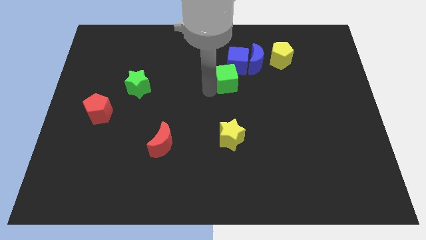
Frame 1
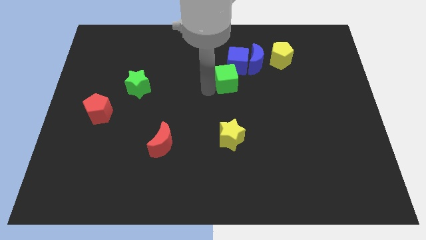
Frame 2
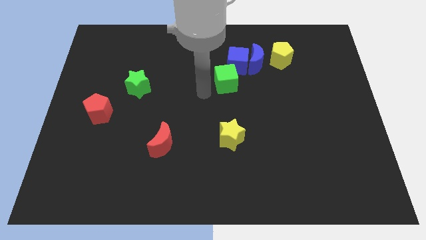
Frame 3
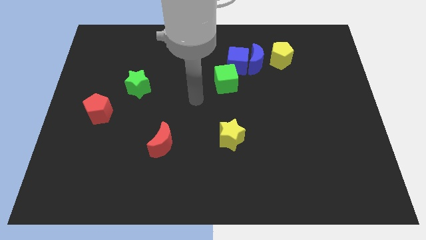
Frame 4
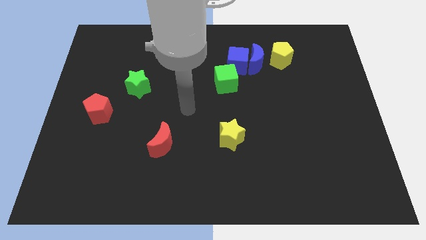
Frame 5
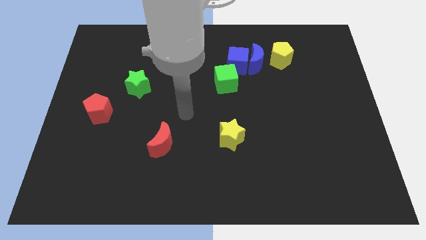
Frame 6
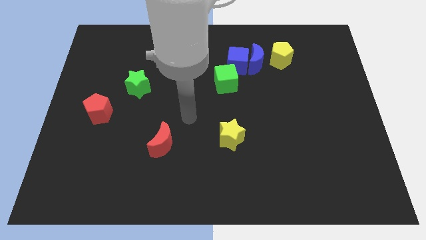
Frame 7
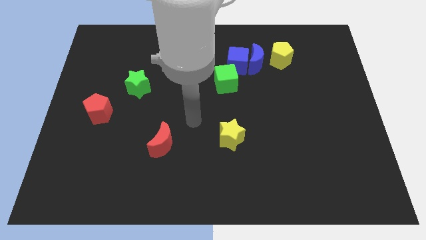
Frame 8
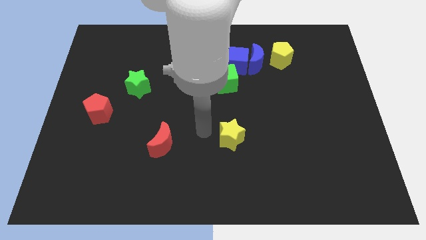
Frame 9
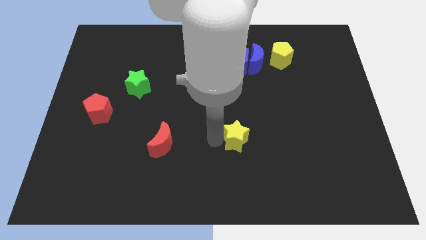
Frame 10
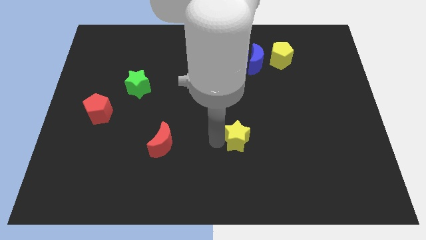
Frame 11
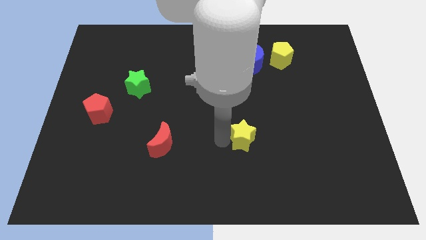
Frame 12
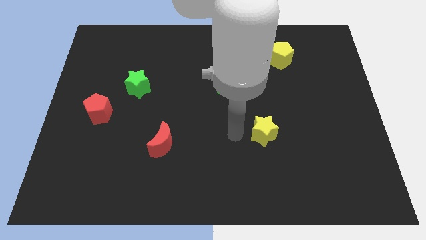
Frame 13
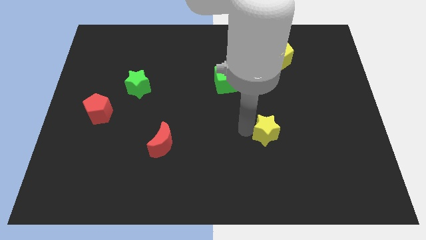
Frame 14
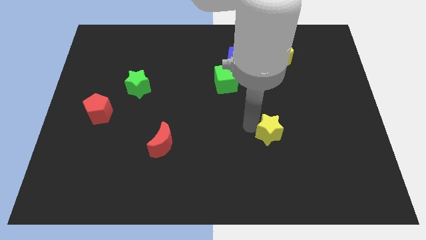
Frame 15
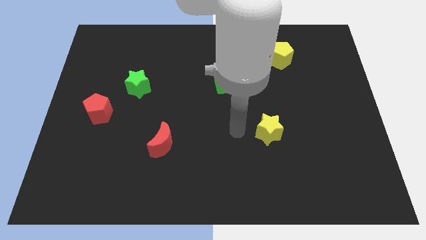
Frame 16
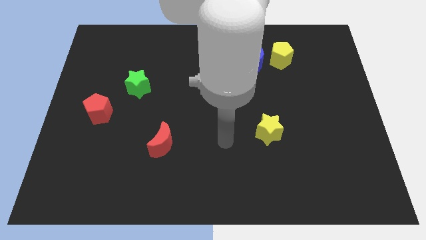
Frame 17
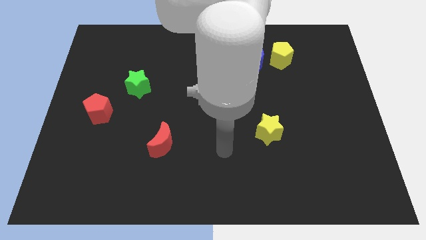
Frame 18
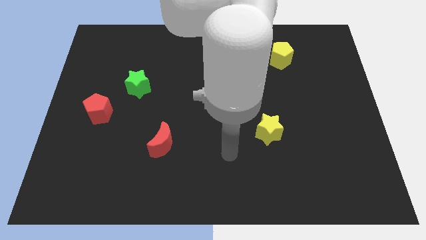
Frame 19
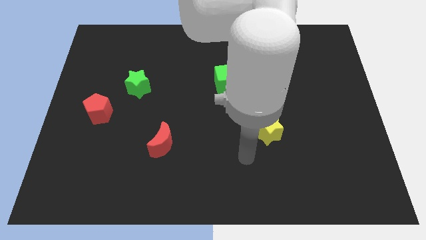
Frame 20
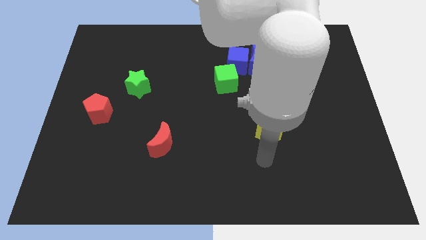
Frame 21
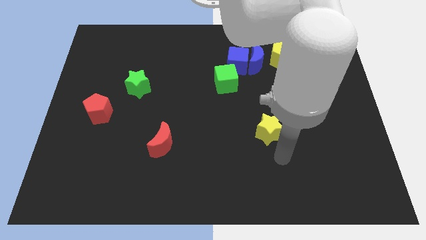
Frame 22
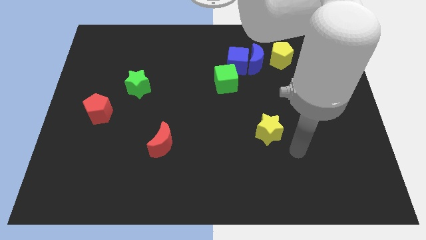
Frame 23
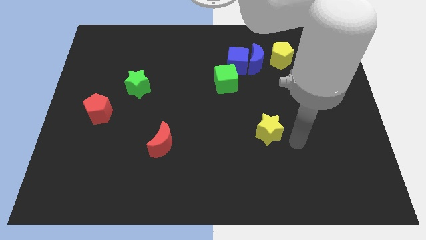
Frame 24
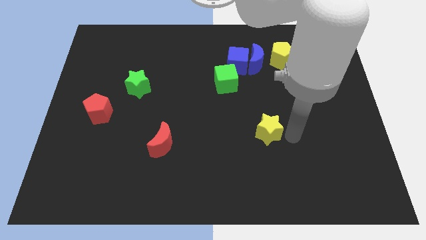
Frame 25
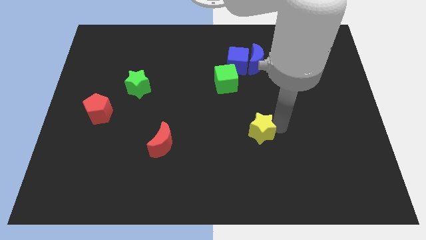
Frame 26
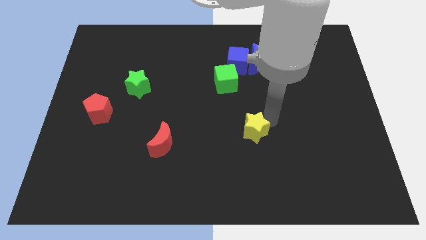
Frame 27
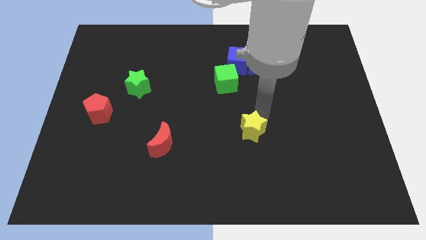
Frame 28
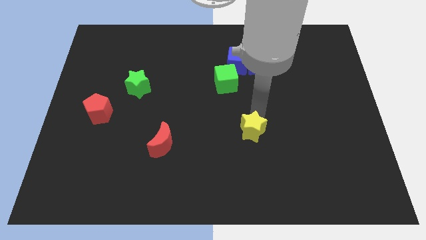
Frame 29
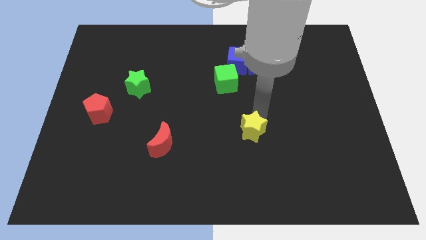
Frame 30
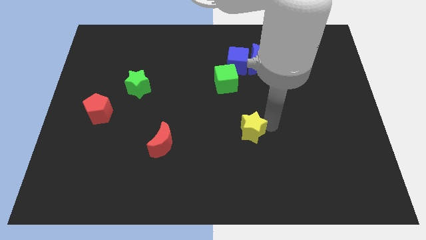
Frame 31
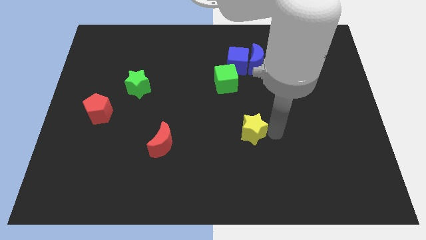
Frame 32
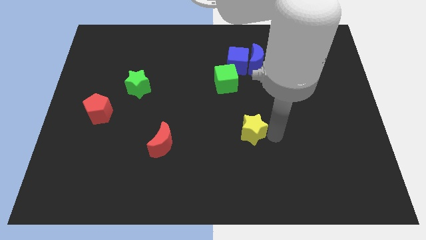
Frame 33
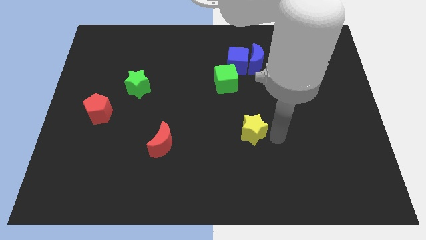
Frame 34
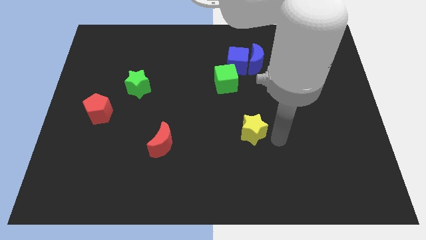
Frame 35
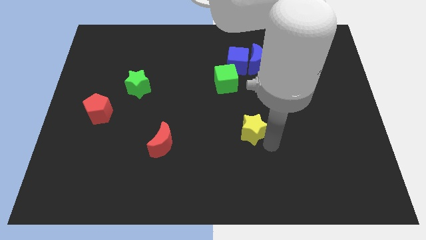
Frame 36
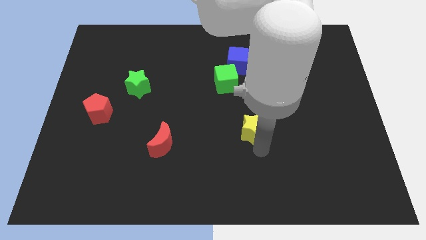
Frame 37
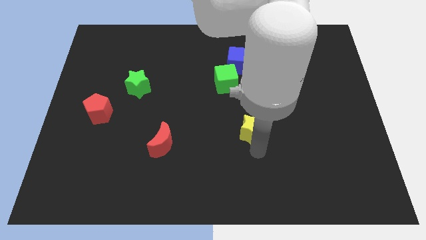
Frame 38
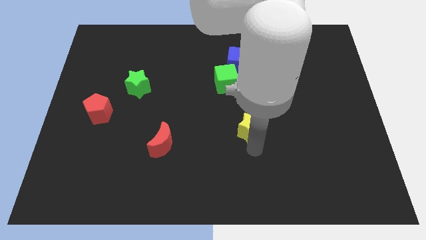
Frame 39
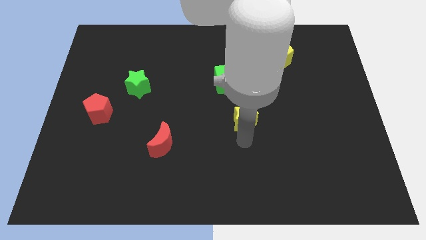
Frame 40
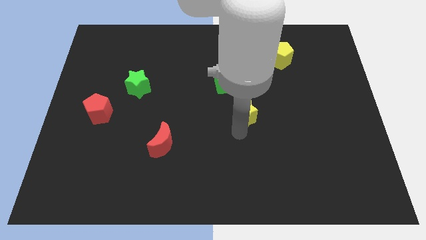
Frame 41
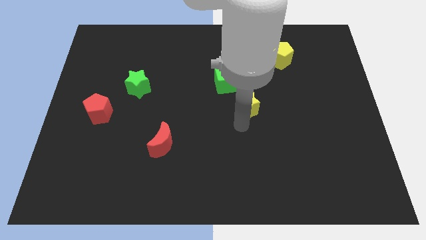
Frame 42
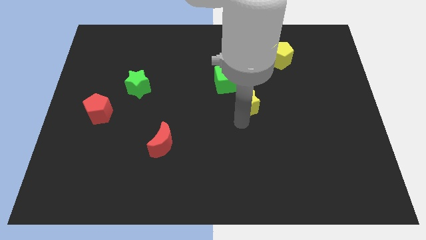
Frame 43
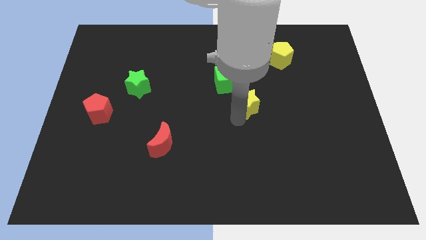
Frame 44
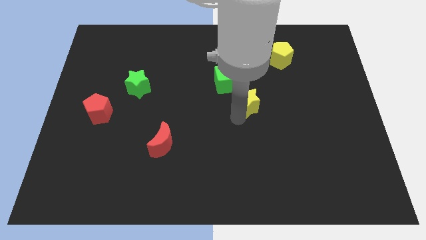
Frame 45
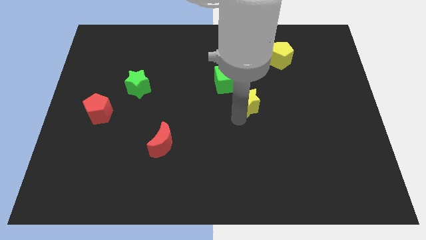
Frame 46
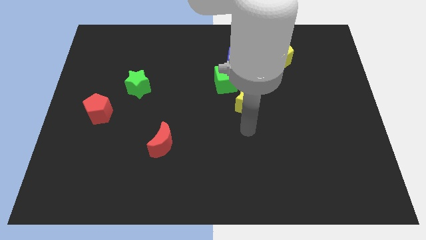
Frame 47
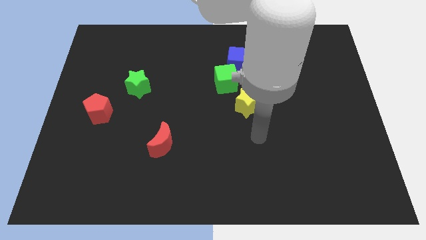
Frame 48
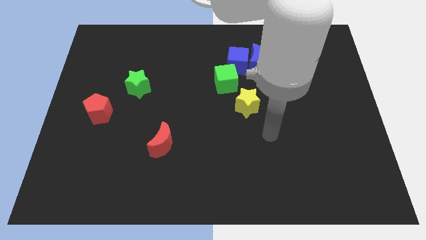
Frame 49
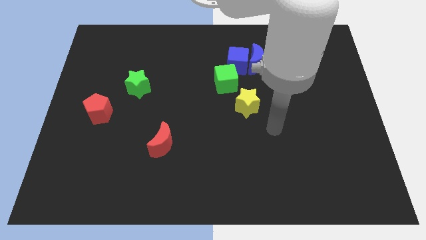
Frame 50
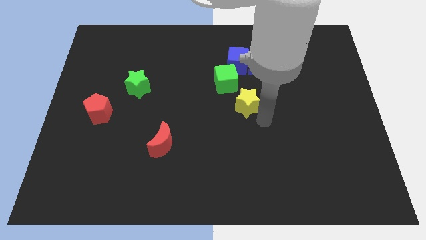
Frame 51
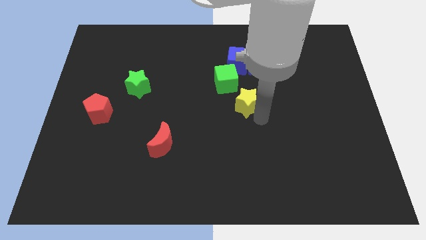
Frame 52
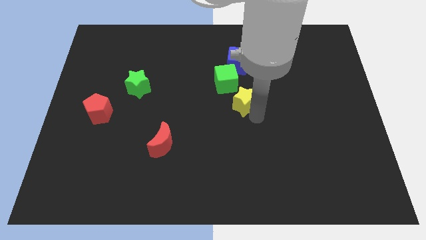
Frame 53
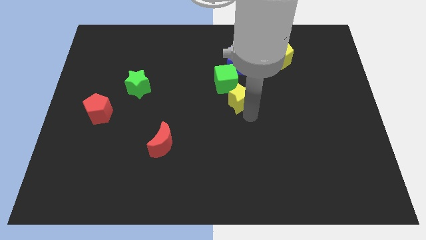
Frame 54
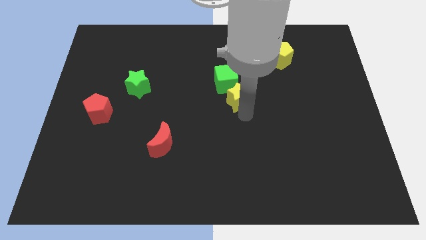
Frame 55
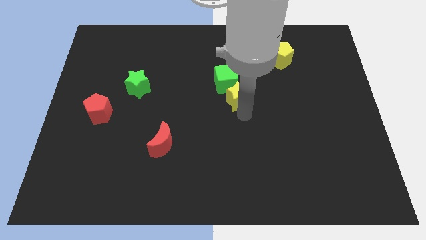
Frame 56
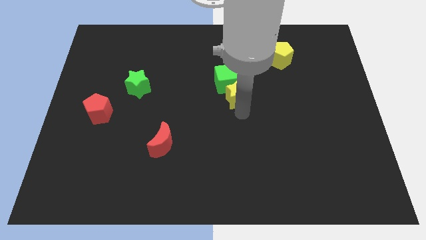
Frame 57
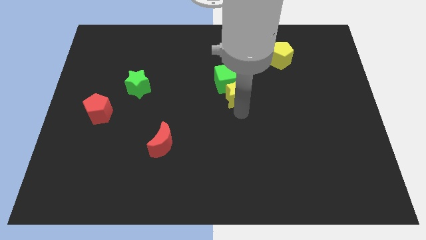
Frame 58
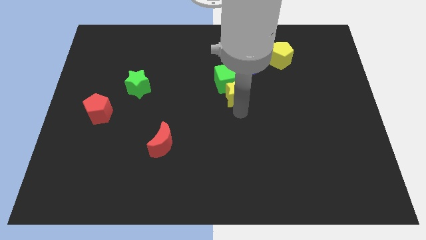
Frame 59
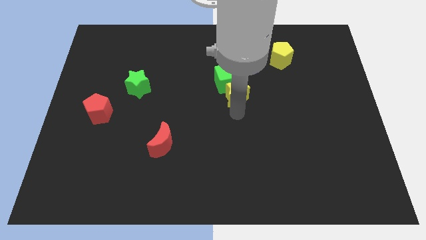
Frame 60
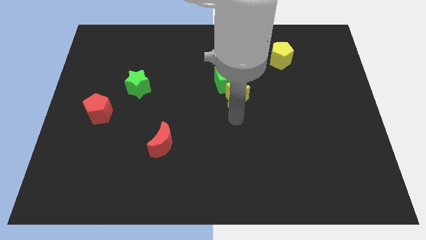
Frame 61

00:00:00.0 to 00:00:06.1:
place the yellow star at the bottom of green cube

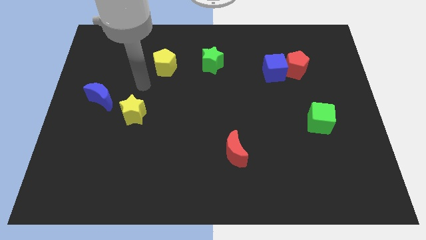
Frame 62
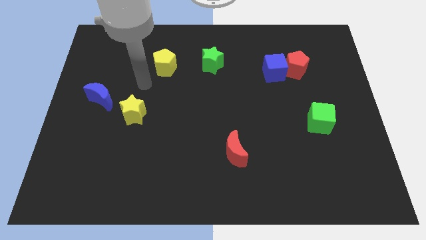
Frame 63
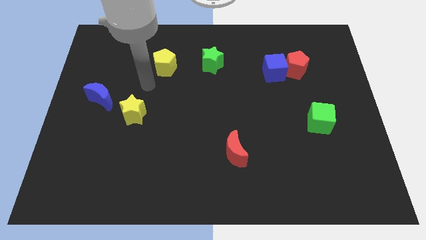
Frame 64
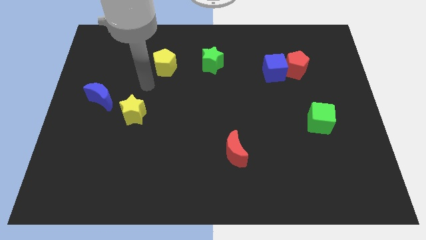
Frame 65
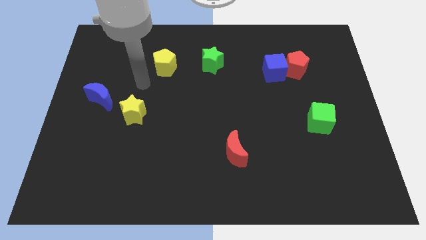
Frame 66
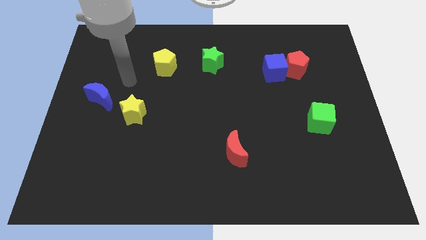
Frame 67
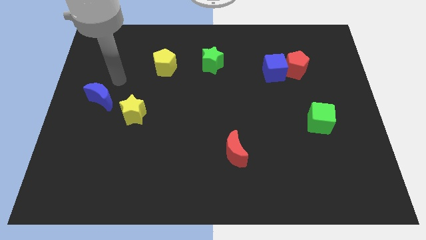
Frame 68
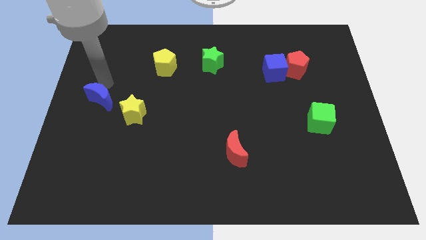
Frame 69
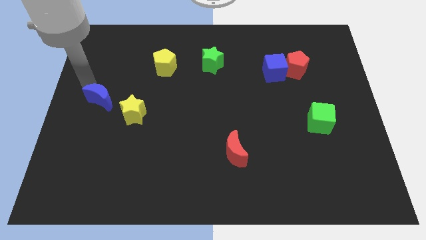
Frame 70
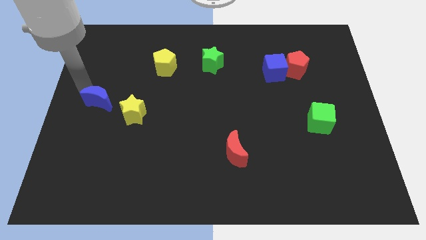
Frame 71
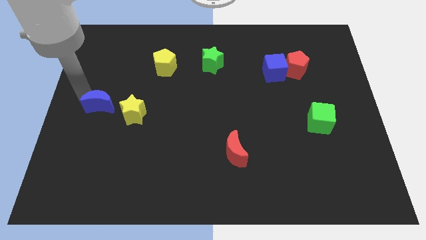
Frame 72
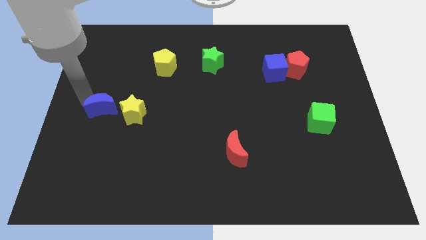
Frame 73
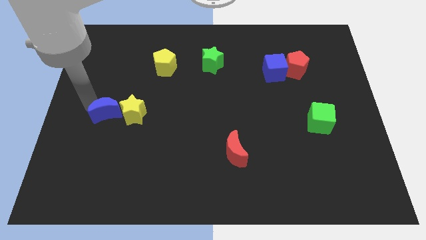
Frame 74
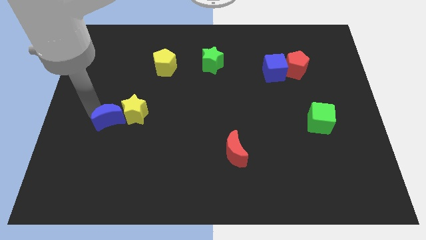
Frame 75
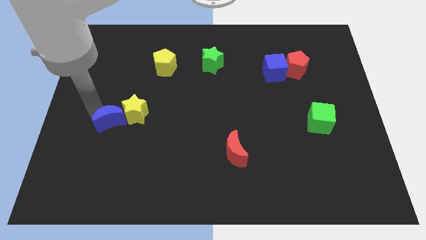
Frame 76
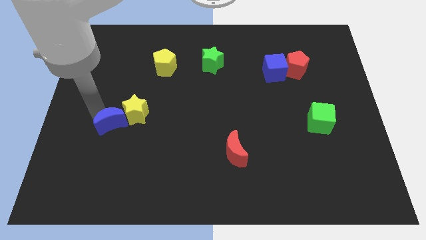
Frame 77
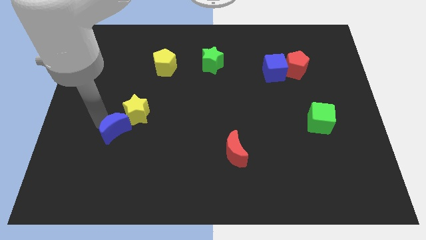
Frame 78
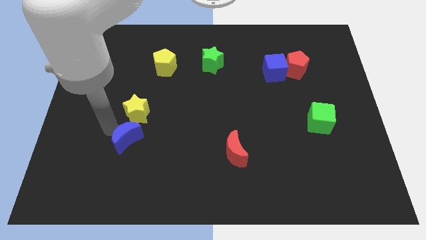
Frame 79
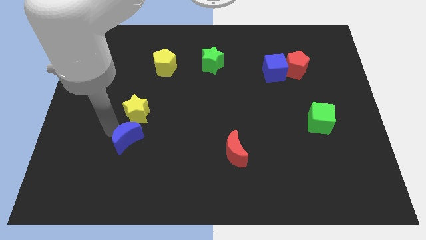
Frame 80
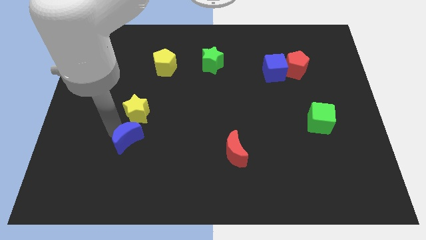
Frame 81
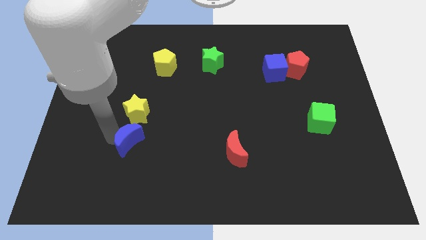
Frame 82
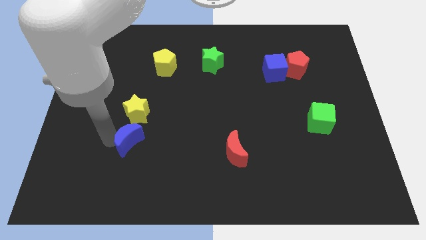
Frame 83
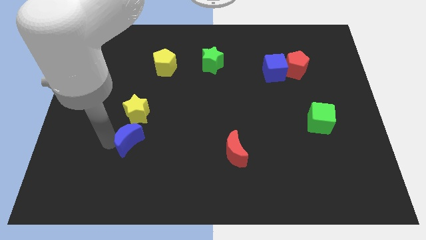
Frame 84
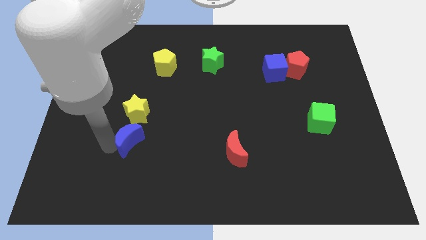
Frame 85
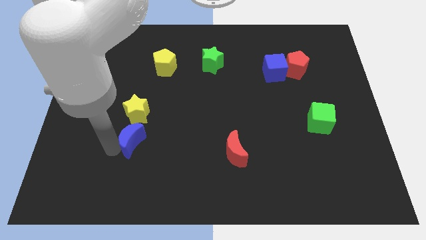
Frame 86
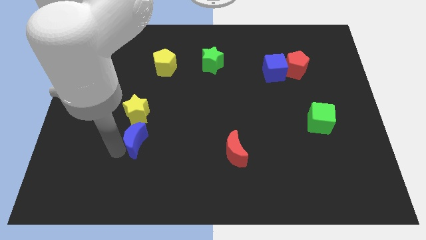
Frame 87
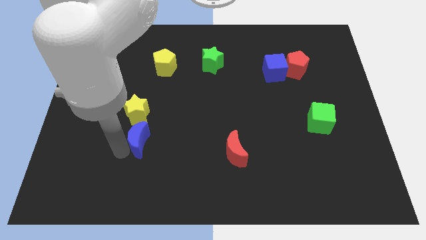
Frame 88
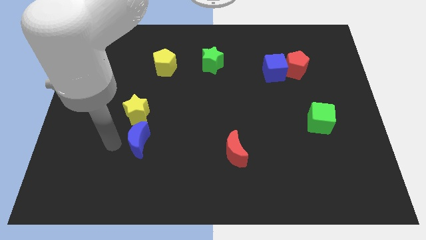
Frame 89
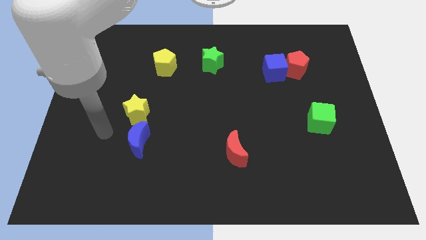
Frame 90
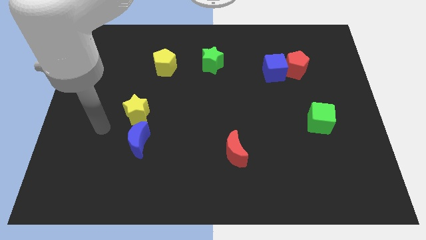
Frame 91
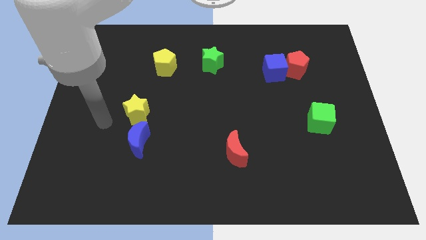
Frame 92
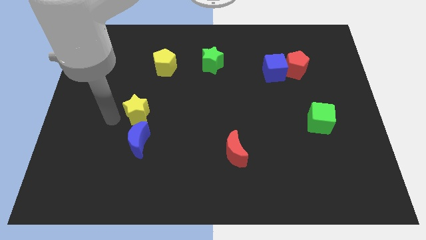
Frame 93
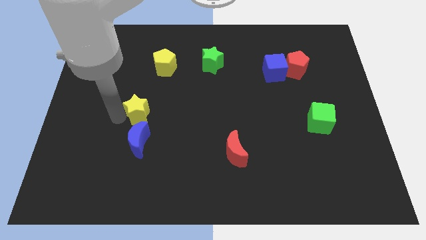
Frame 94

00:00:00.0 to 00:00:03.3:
move blue moon to the bottom of yellow star
